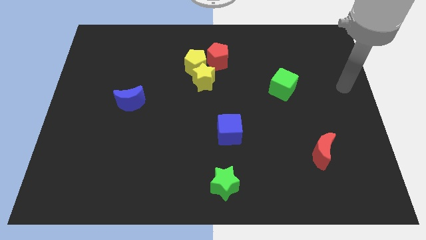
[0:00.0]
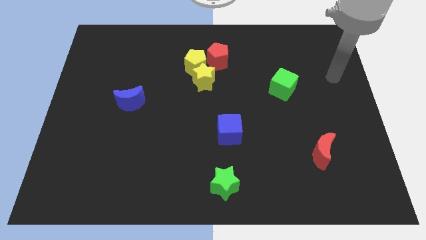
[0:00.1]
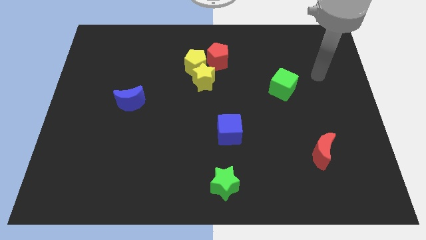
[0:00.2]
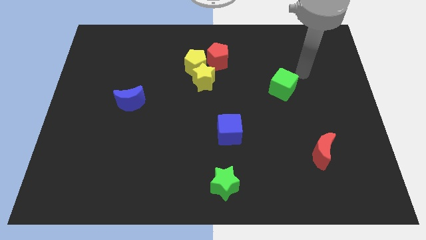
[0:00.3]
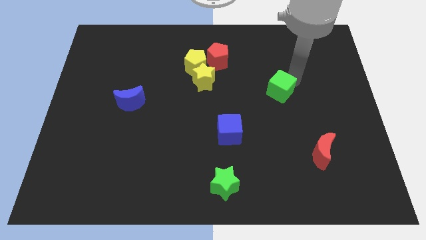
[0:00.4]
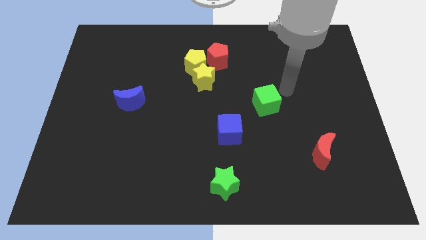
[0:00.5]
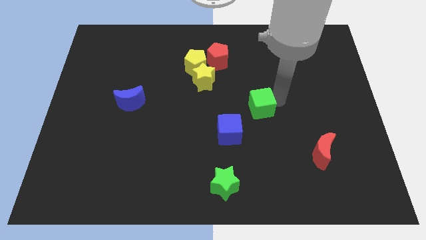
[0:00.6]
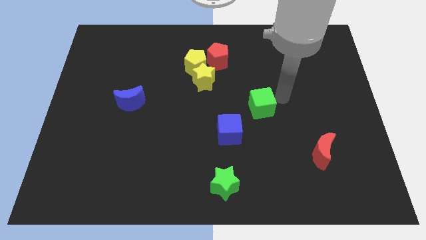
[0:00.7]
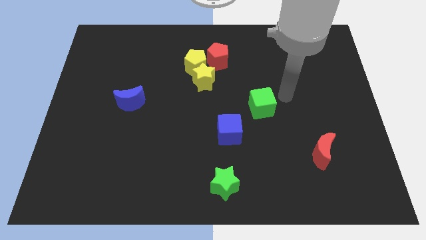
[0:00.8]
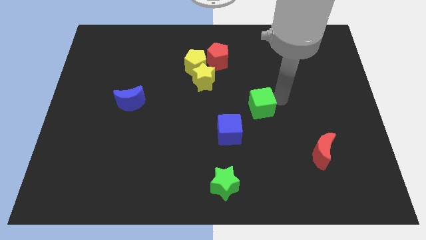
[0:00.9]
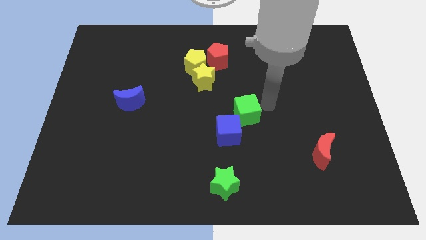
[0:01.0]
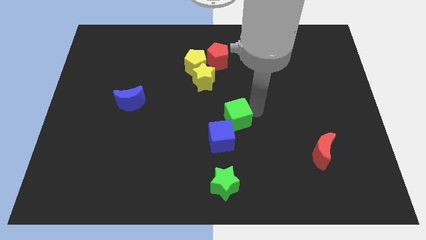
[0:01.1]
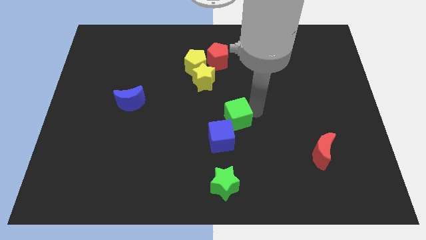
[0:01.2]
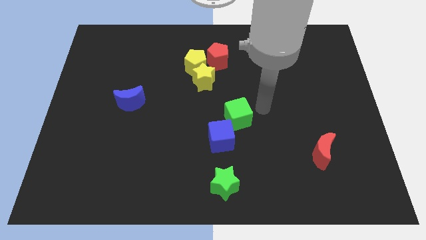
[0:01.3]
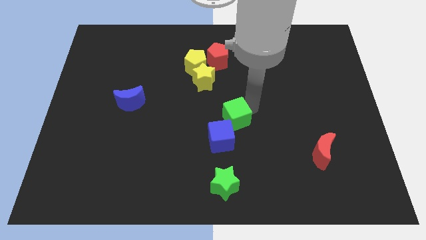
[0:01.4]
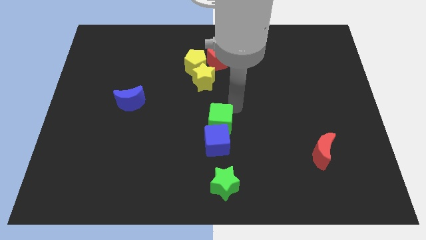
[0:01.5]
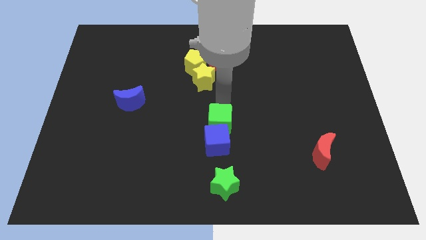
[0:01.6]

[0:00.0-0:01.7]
move the green cube to the top of the blue cube

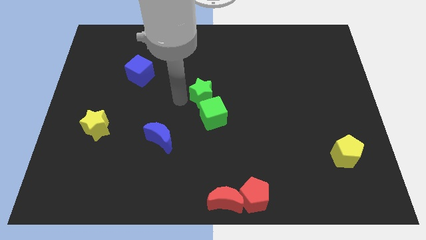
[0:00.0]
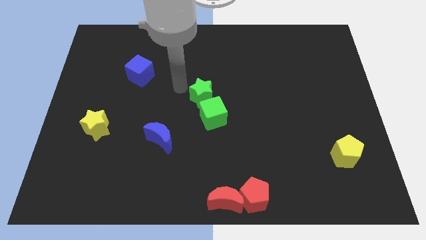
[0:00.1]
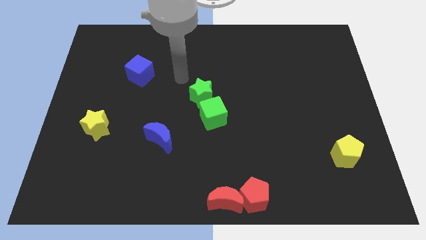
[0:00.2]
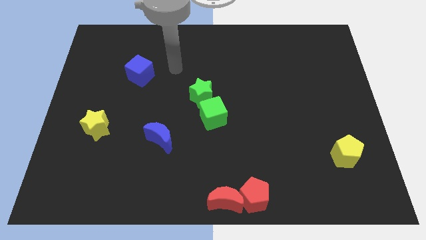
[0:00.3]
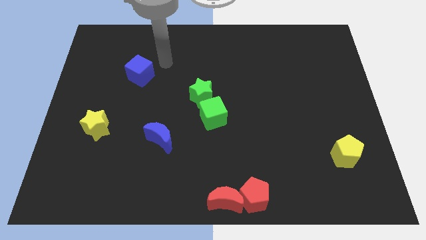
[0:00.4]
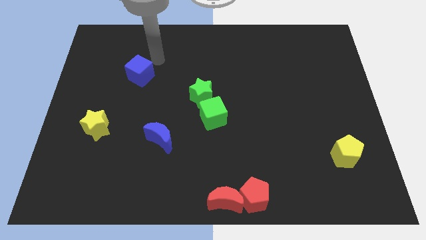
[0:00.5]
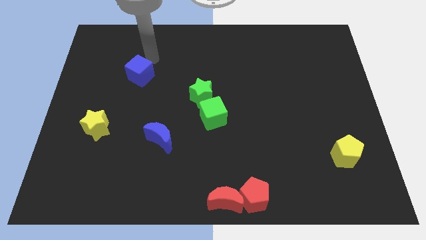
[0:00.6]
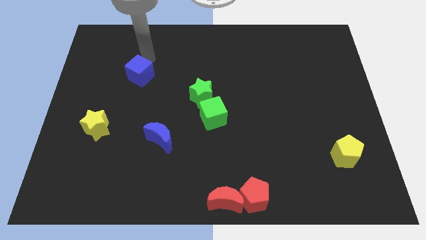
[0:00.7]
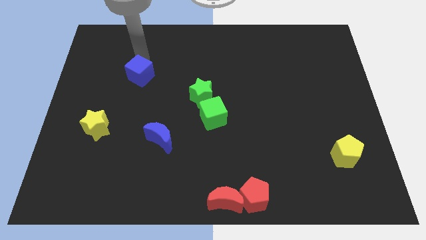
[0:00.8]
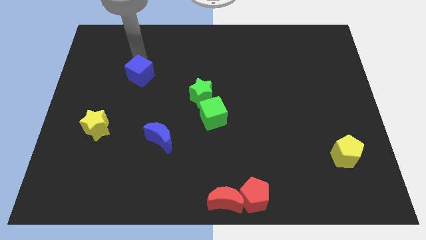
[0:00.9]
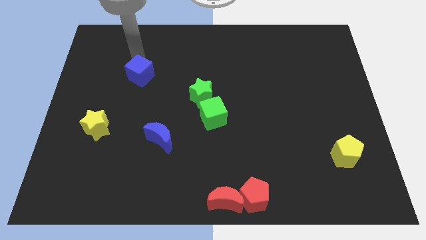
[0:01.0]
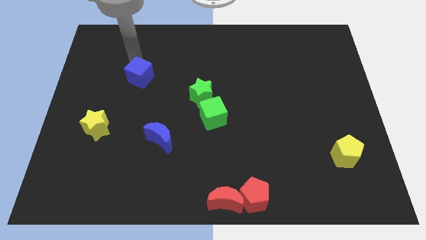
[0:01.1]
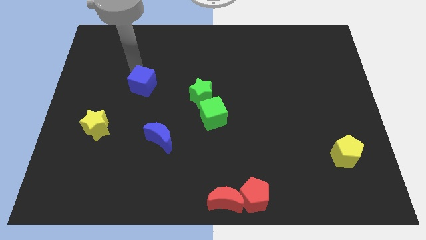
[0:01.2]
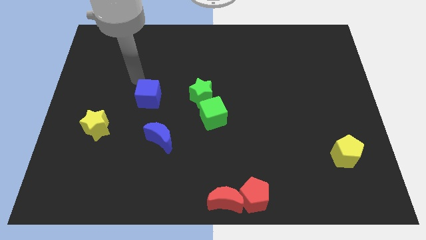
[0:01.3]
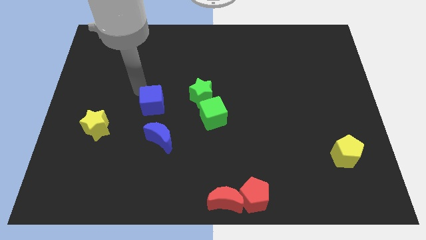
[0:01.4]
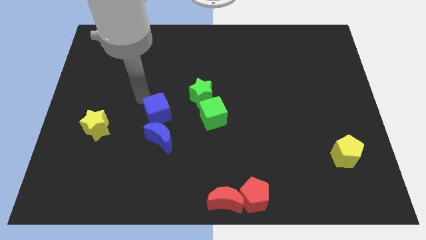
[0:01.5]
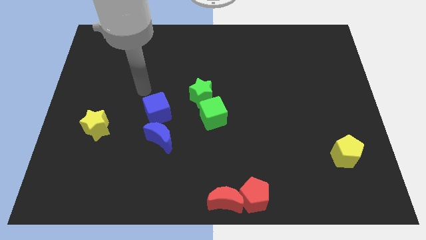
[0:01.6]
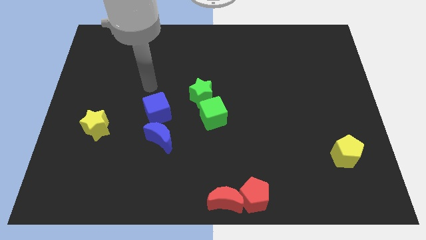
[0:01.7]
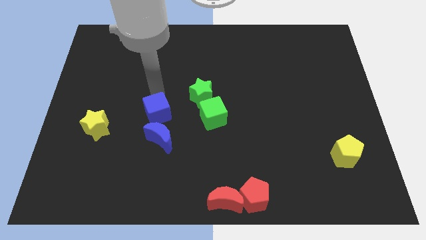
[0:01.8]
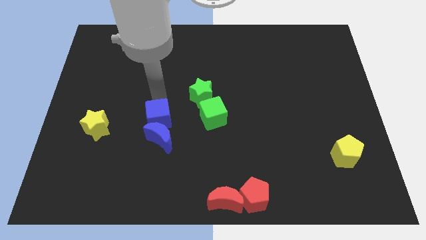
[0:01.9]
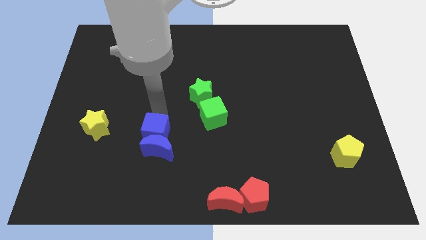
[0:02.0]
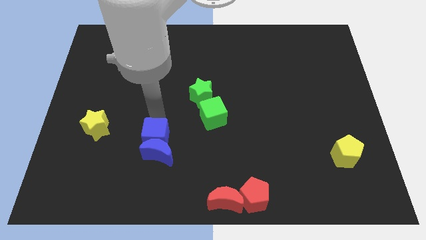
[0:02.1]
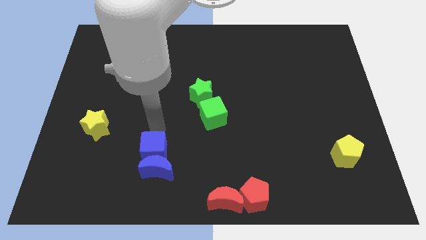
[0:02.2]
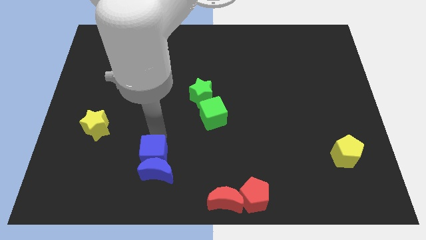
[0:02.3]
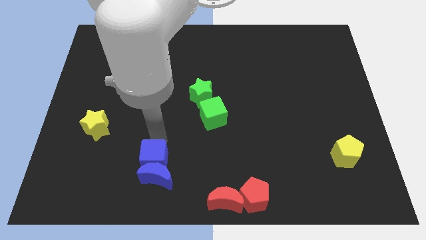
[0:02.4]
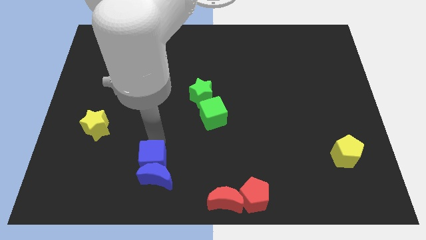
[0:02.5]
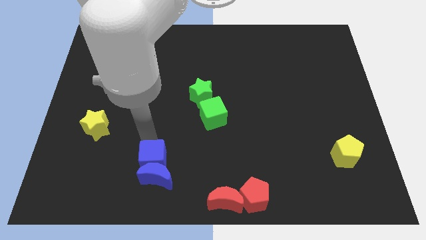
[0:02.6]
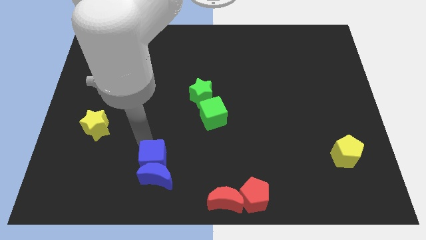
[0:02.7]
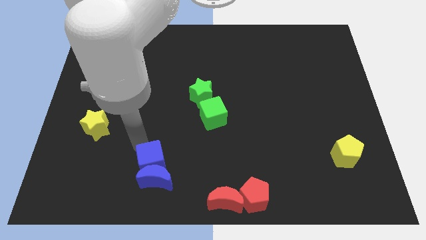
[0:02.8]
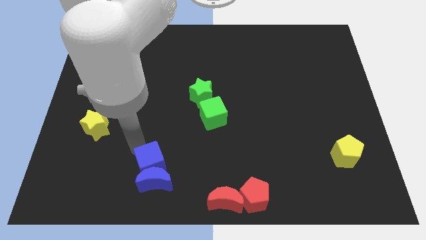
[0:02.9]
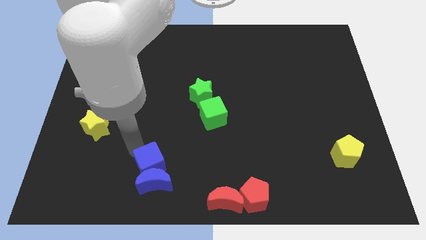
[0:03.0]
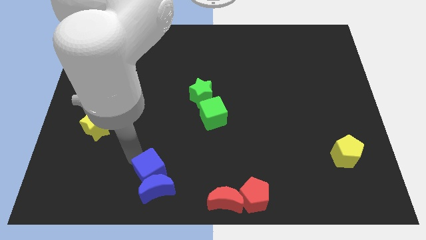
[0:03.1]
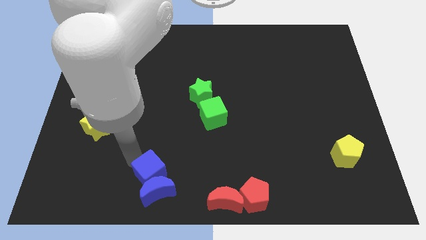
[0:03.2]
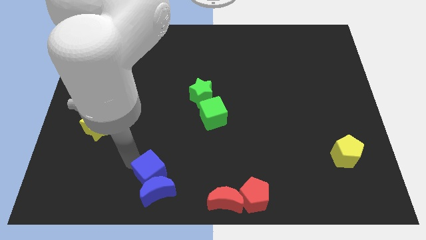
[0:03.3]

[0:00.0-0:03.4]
drag the blue cube and blue crescent towards the bottom of the board

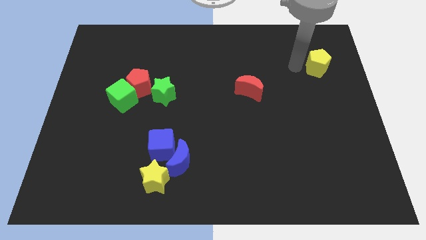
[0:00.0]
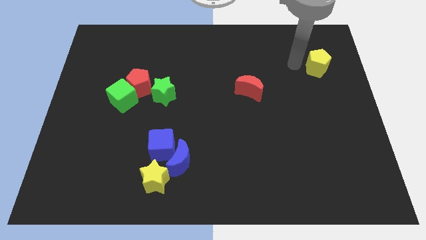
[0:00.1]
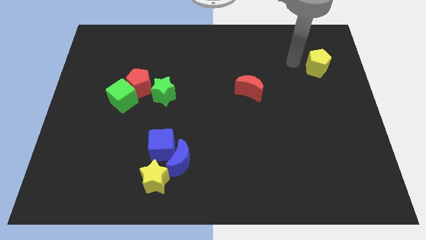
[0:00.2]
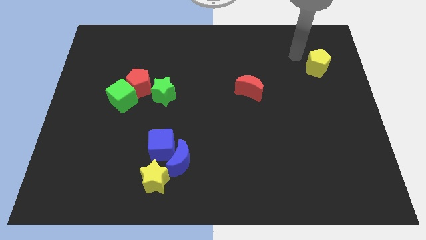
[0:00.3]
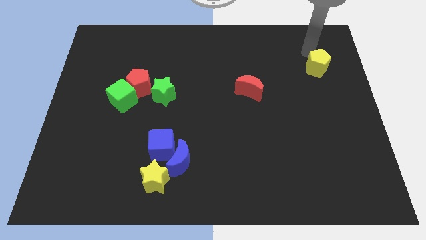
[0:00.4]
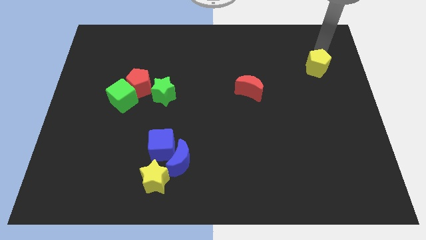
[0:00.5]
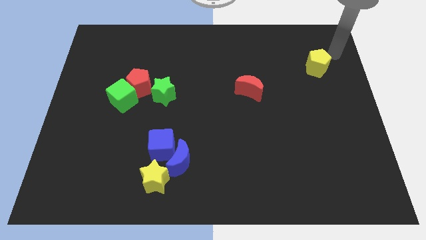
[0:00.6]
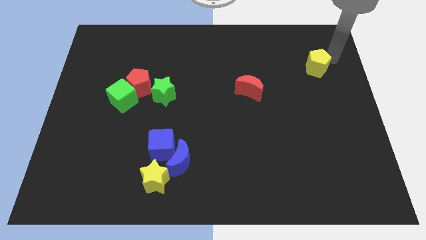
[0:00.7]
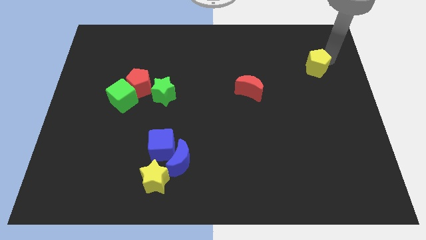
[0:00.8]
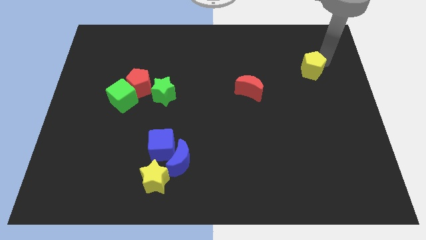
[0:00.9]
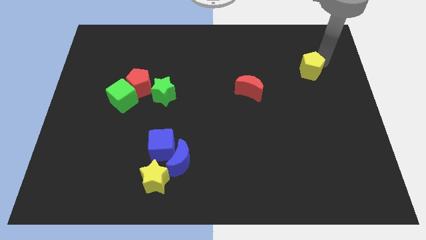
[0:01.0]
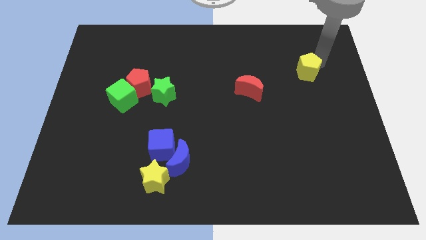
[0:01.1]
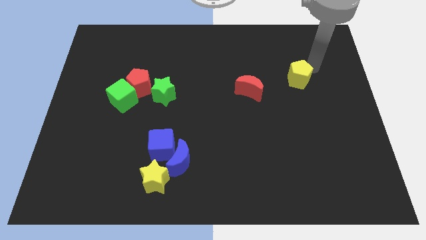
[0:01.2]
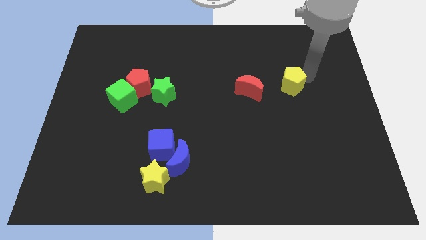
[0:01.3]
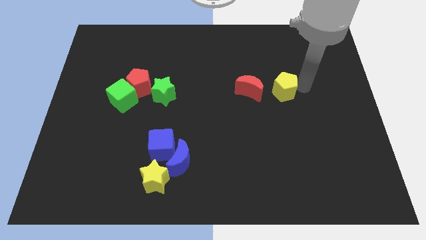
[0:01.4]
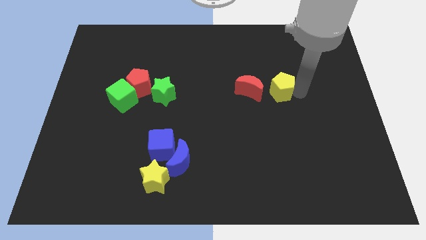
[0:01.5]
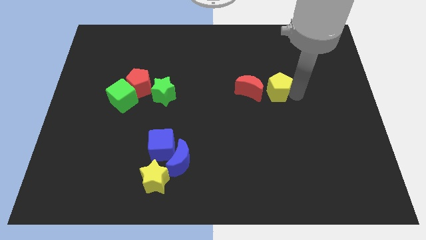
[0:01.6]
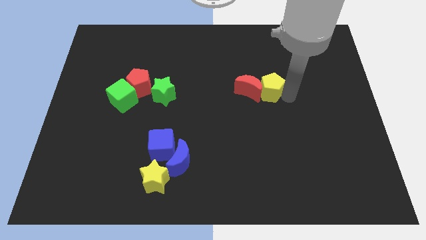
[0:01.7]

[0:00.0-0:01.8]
push the yellow pentagon to the right of the red crescent

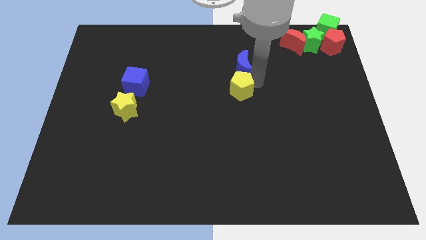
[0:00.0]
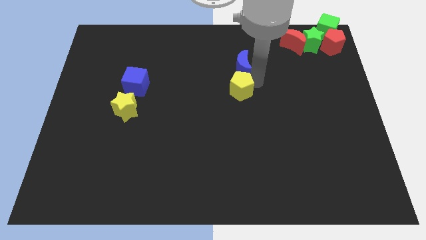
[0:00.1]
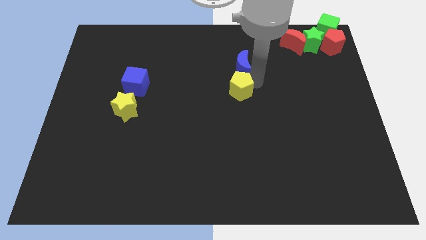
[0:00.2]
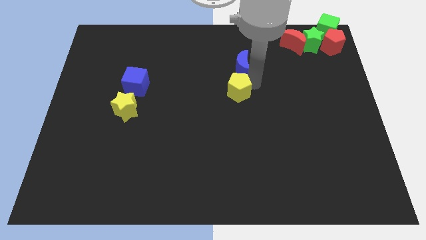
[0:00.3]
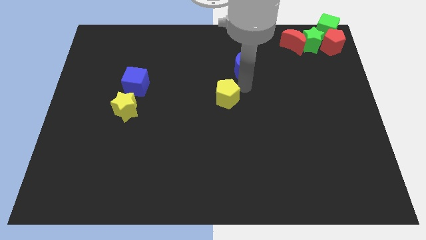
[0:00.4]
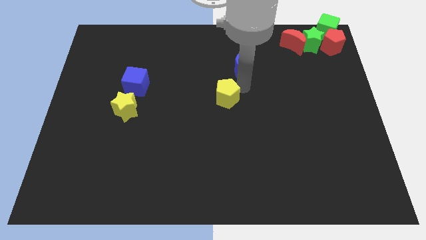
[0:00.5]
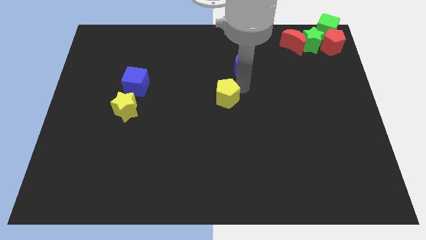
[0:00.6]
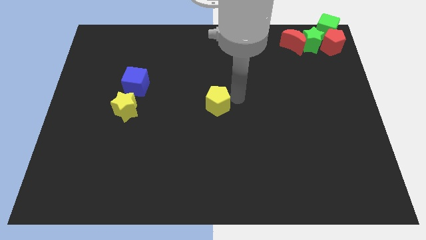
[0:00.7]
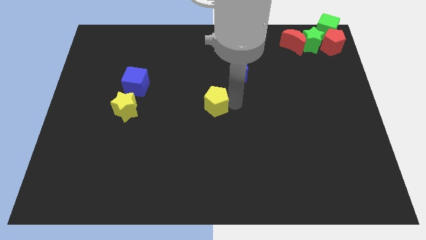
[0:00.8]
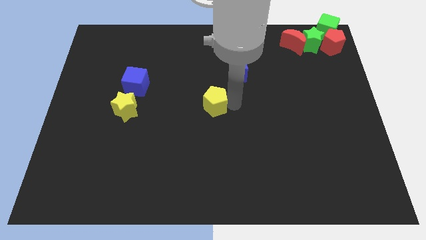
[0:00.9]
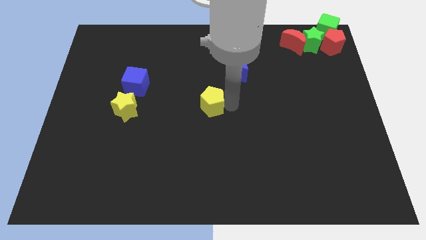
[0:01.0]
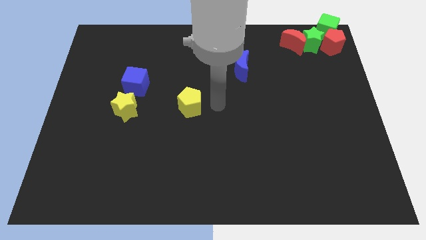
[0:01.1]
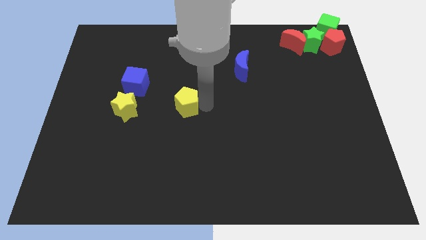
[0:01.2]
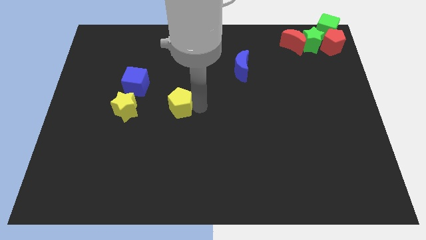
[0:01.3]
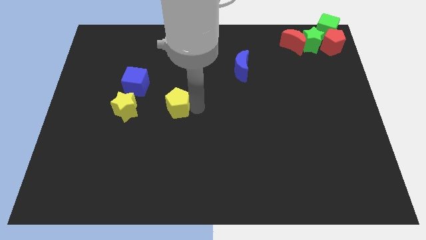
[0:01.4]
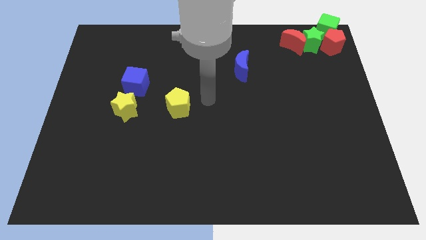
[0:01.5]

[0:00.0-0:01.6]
separate the yellow pentagon from the blue moon

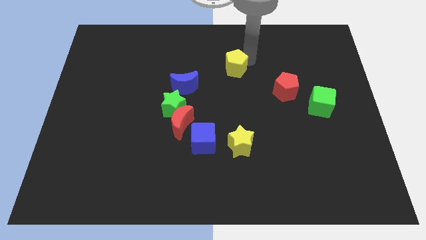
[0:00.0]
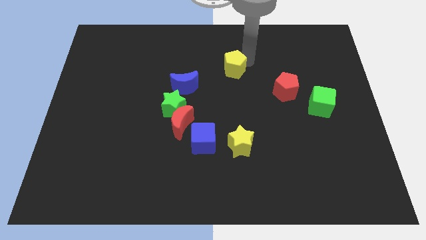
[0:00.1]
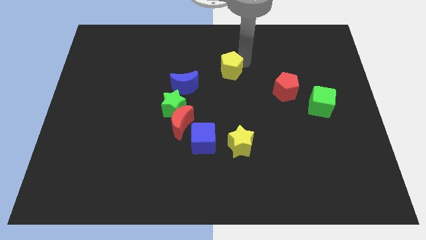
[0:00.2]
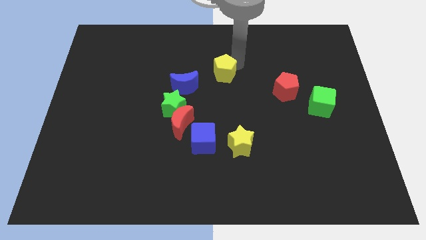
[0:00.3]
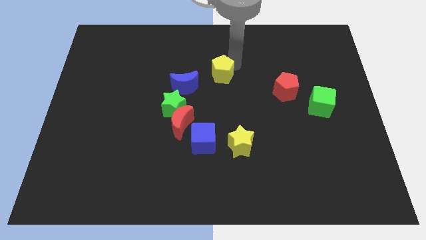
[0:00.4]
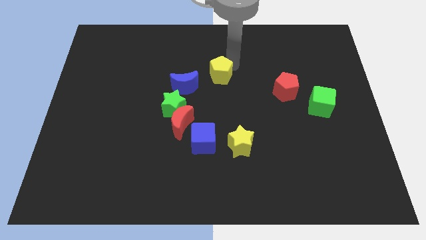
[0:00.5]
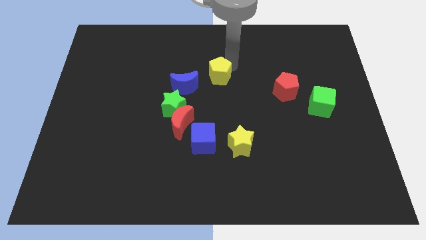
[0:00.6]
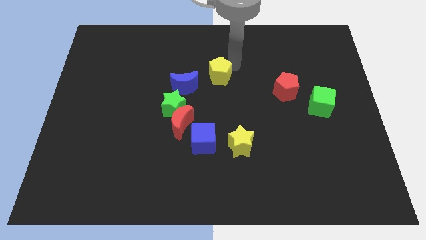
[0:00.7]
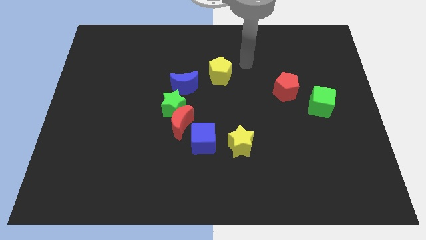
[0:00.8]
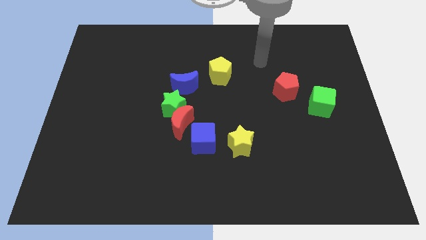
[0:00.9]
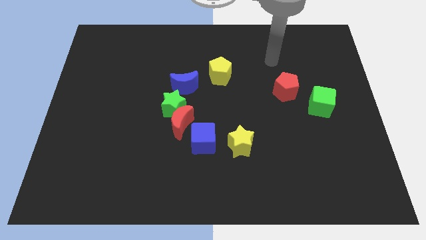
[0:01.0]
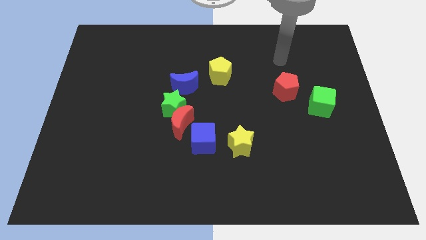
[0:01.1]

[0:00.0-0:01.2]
push yellow pentagon to the right of blue crescent
